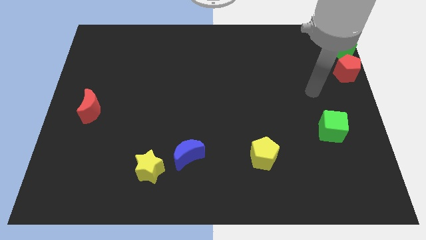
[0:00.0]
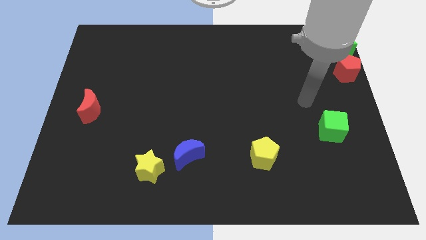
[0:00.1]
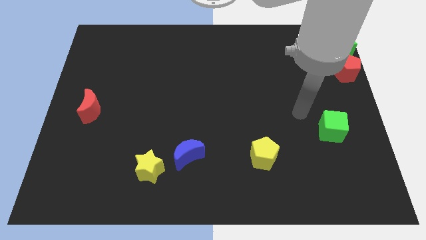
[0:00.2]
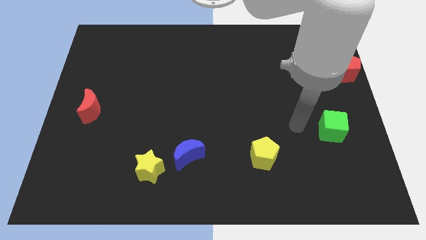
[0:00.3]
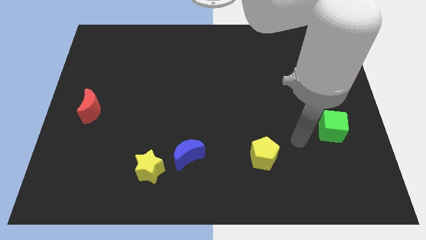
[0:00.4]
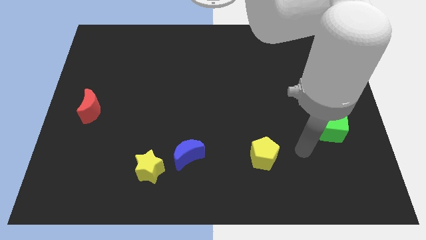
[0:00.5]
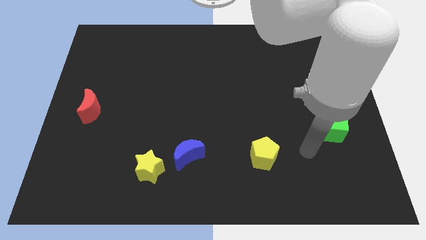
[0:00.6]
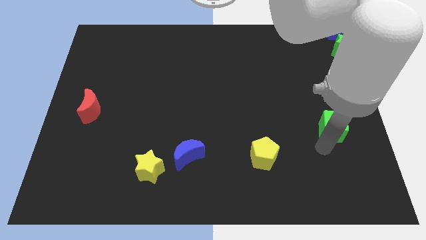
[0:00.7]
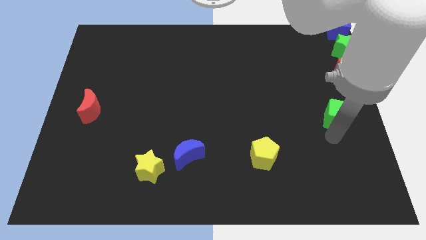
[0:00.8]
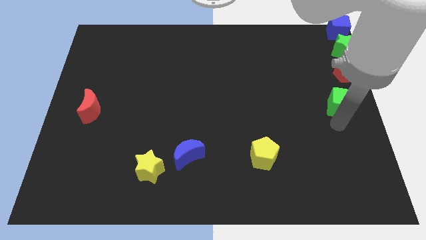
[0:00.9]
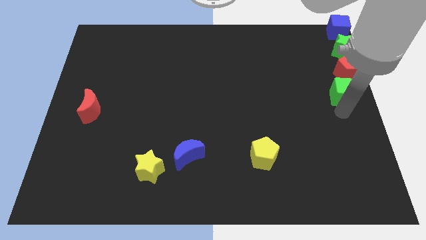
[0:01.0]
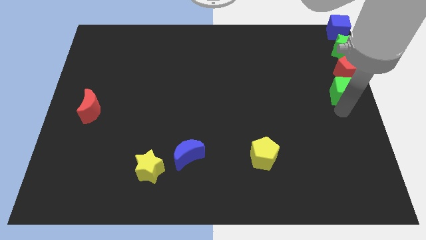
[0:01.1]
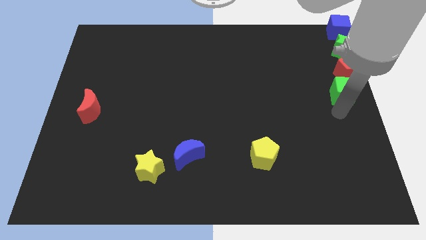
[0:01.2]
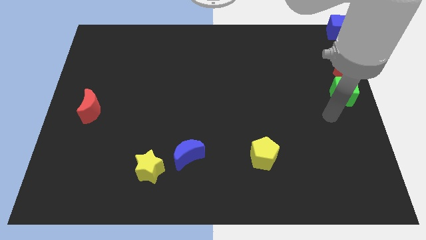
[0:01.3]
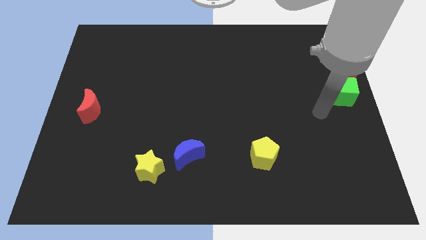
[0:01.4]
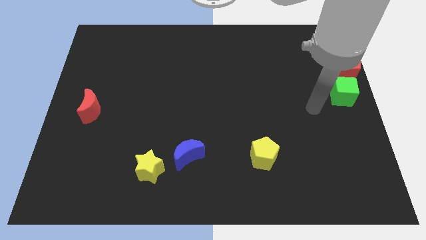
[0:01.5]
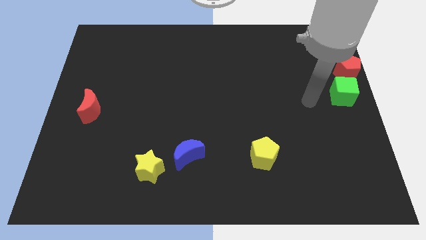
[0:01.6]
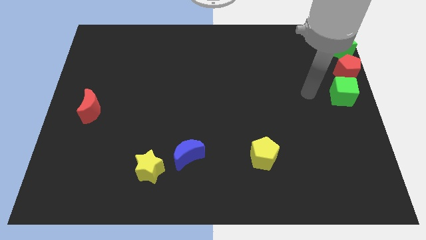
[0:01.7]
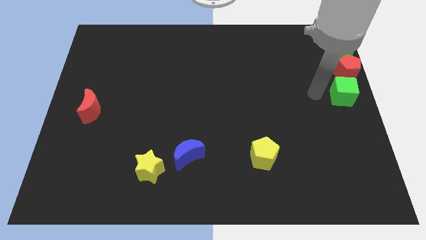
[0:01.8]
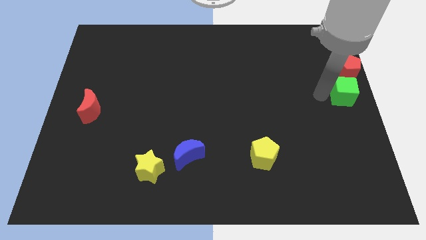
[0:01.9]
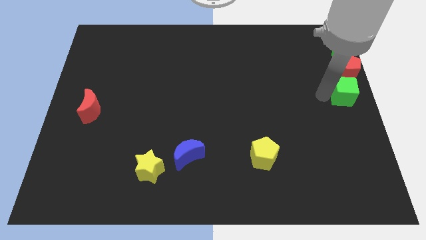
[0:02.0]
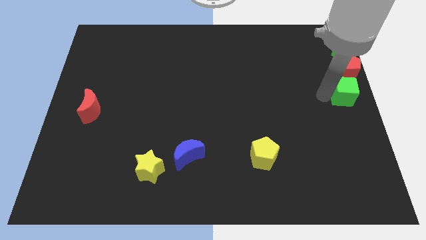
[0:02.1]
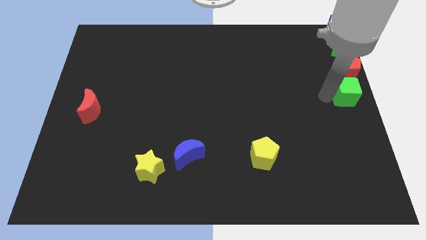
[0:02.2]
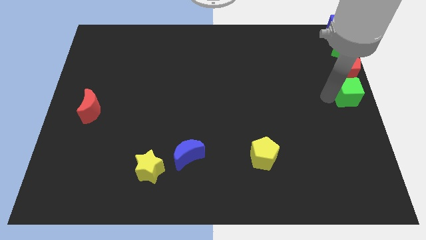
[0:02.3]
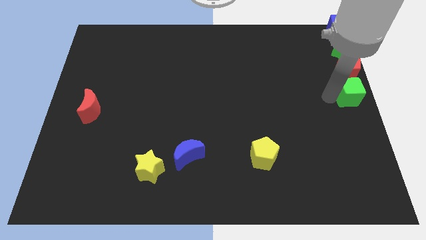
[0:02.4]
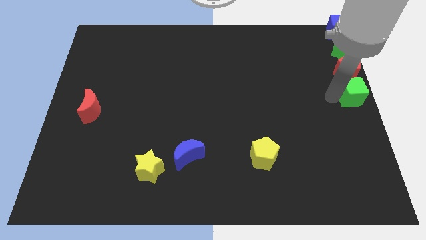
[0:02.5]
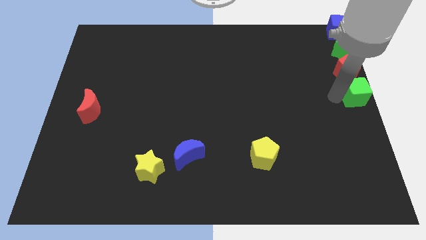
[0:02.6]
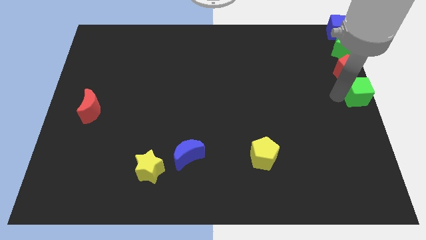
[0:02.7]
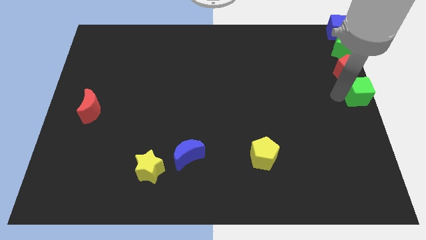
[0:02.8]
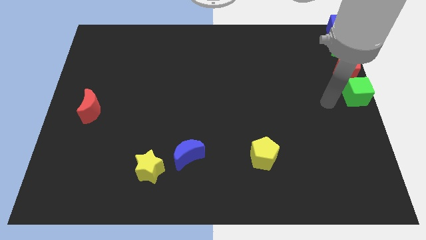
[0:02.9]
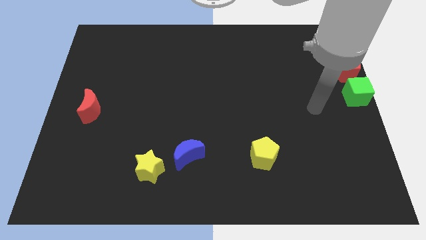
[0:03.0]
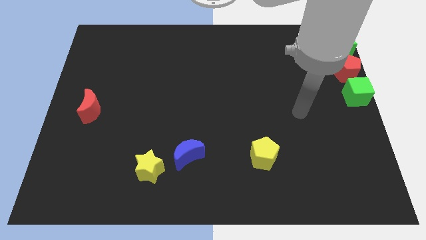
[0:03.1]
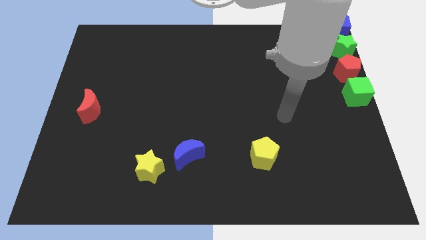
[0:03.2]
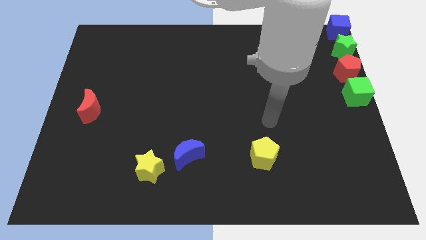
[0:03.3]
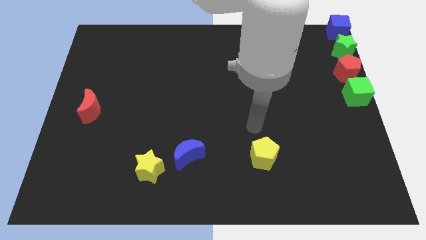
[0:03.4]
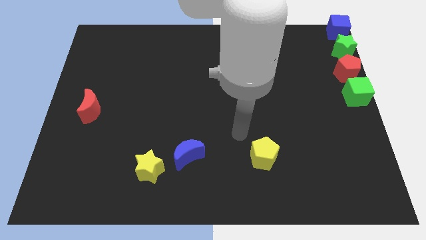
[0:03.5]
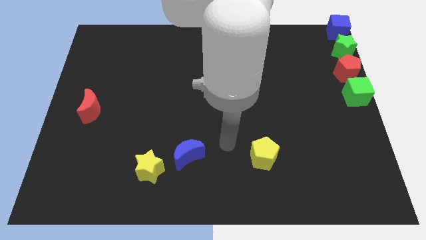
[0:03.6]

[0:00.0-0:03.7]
move the green cube below the red pentagon

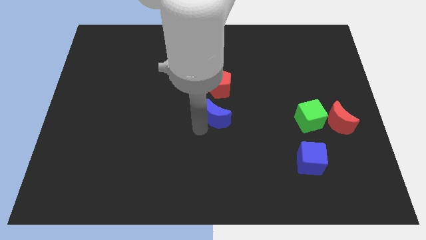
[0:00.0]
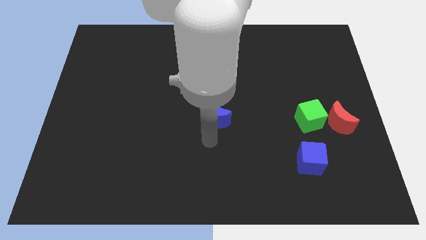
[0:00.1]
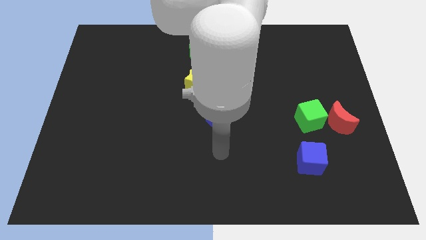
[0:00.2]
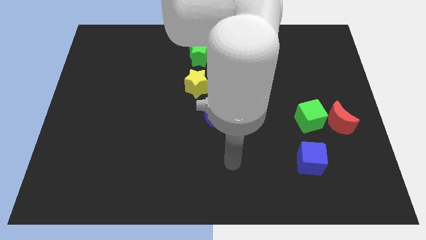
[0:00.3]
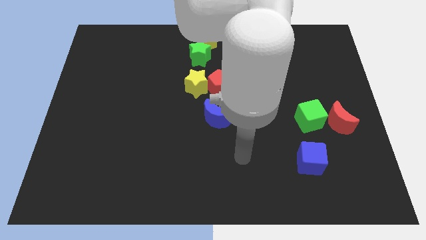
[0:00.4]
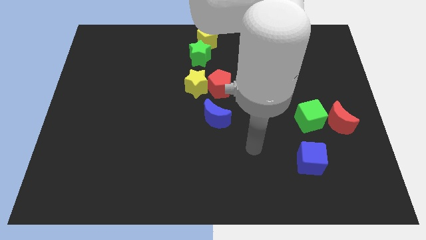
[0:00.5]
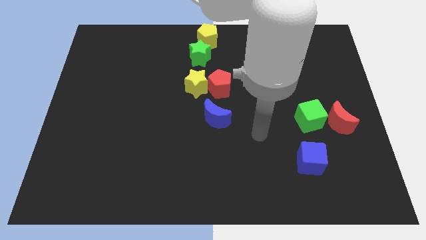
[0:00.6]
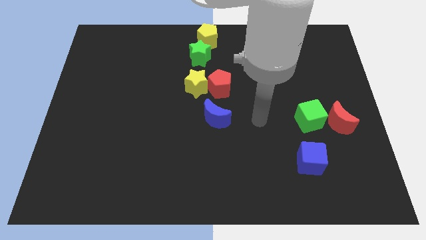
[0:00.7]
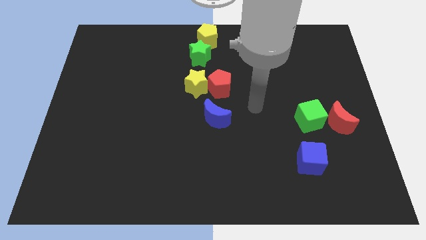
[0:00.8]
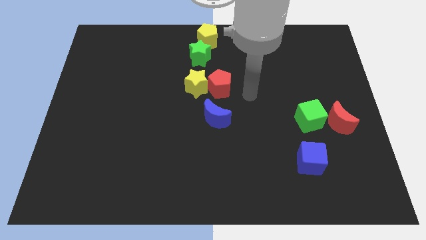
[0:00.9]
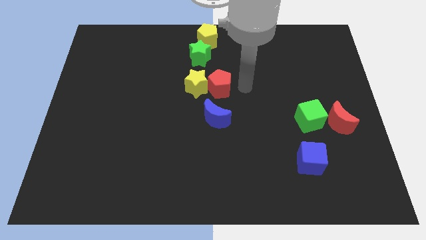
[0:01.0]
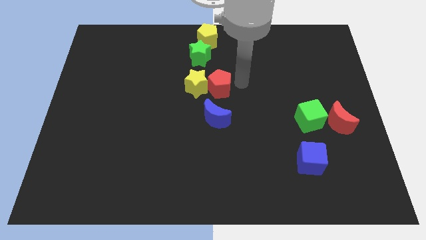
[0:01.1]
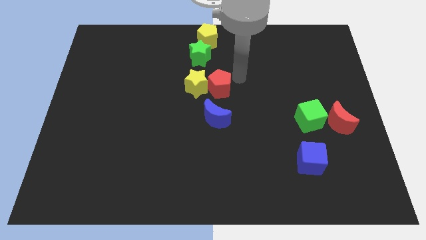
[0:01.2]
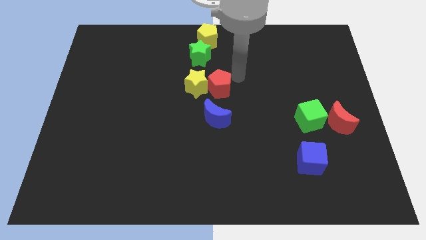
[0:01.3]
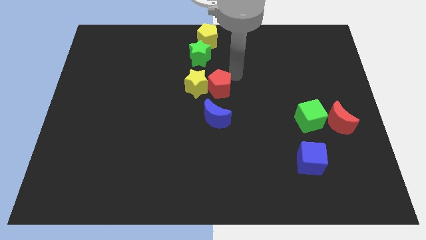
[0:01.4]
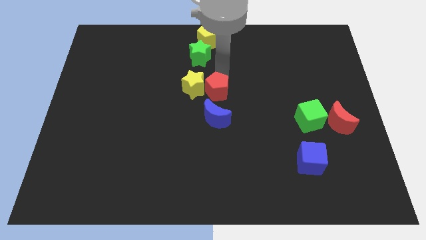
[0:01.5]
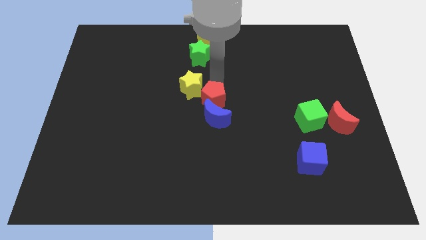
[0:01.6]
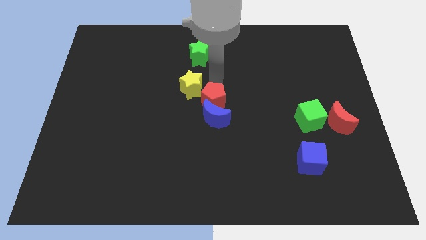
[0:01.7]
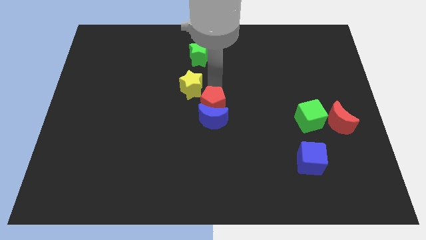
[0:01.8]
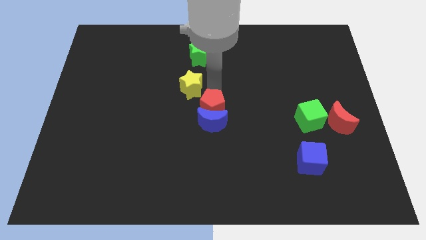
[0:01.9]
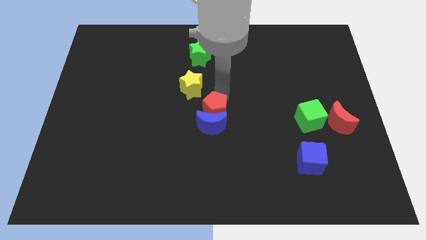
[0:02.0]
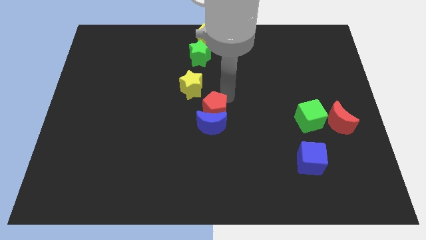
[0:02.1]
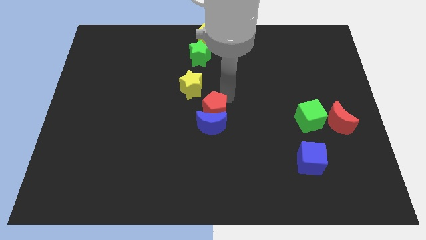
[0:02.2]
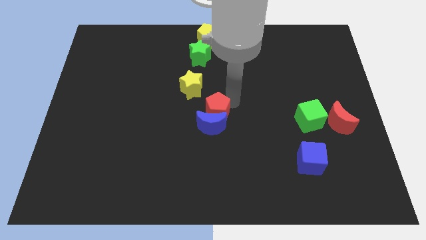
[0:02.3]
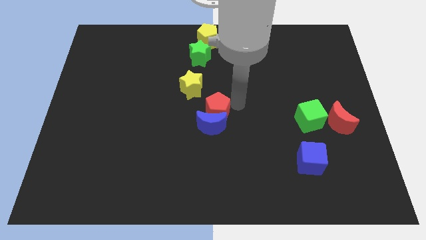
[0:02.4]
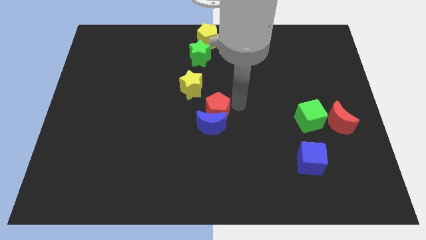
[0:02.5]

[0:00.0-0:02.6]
push the red pentagon into the top side of the blue moon

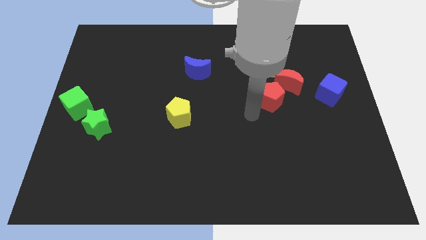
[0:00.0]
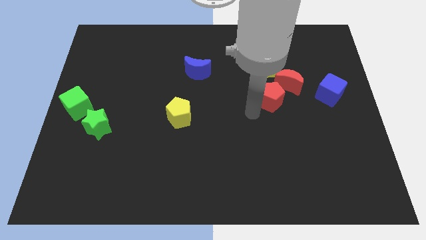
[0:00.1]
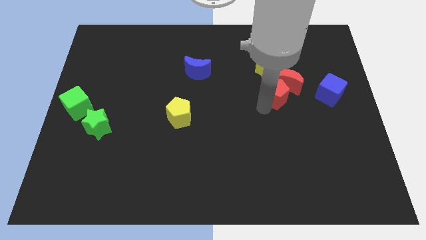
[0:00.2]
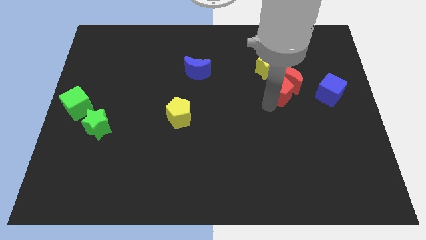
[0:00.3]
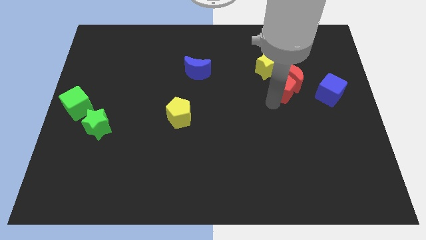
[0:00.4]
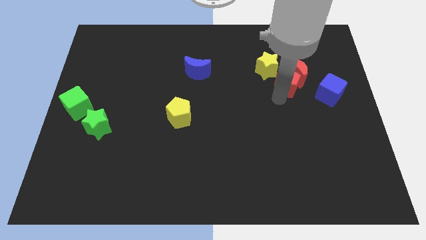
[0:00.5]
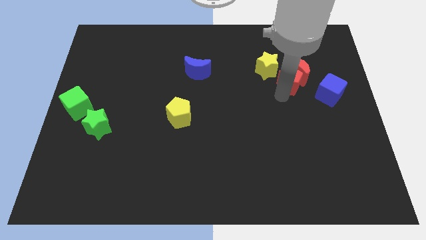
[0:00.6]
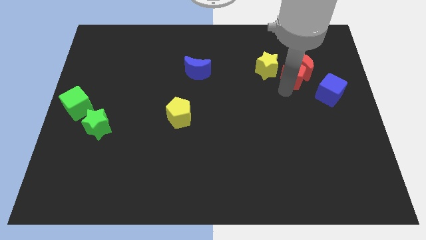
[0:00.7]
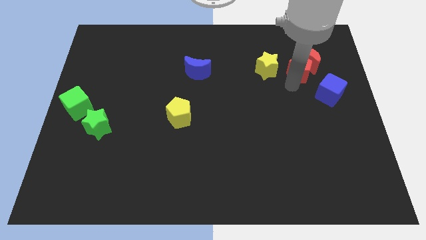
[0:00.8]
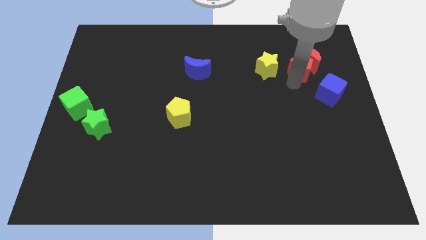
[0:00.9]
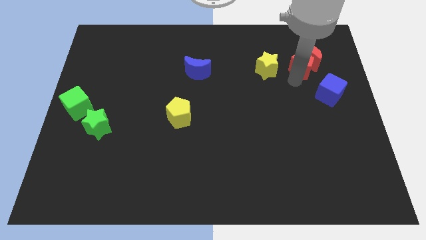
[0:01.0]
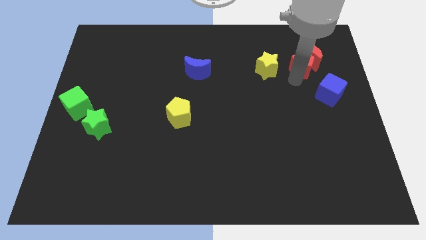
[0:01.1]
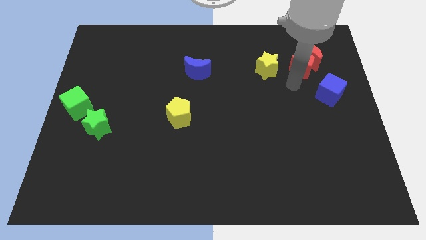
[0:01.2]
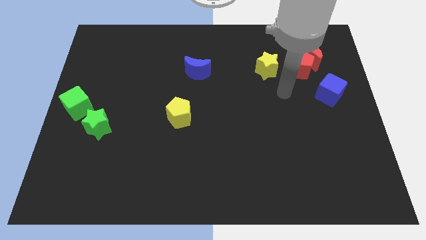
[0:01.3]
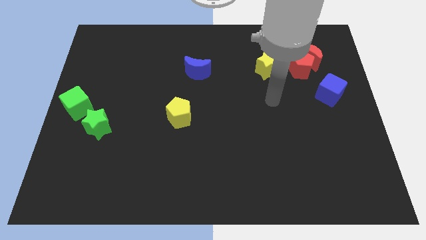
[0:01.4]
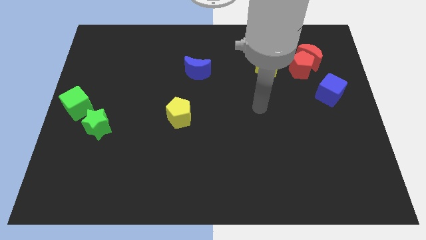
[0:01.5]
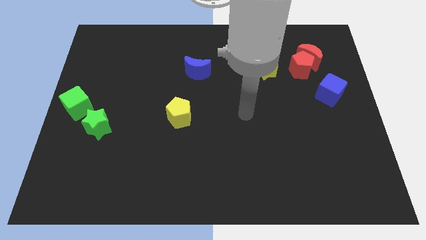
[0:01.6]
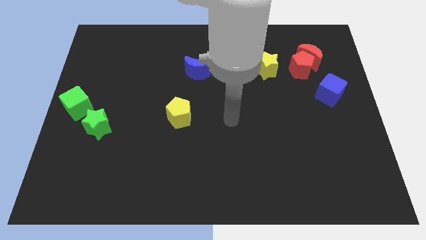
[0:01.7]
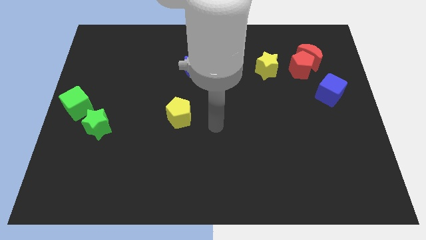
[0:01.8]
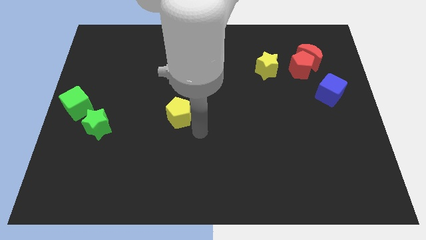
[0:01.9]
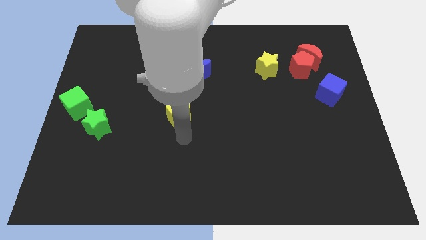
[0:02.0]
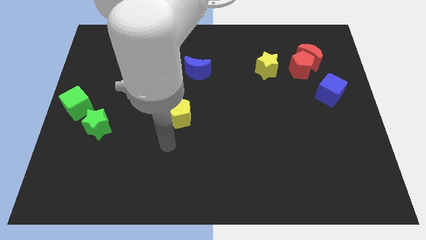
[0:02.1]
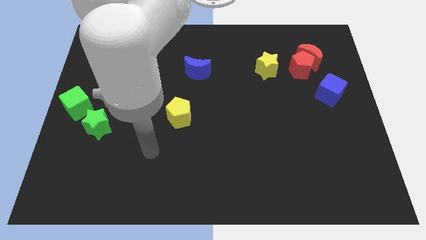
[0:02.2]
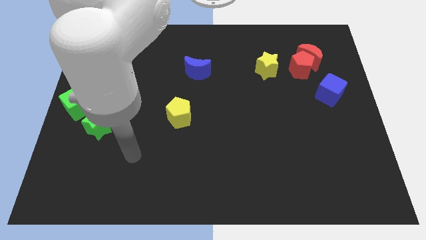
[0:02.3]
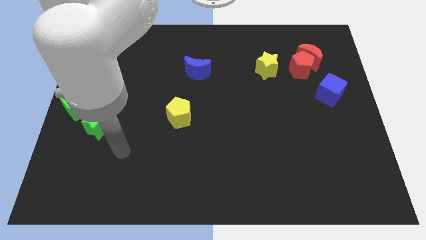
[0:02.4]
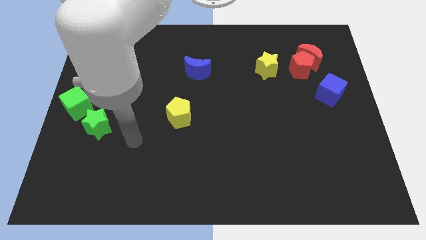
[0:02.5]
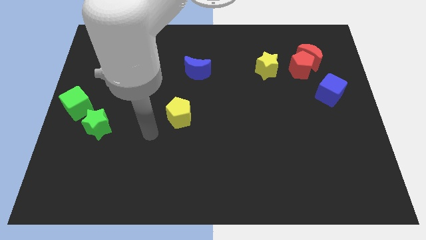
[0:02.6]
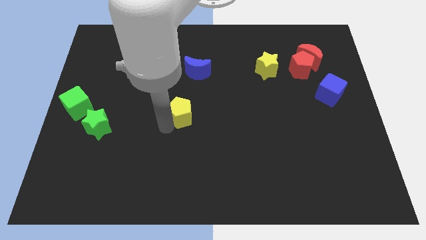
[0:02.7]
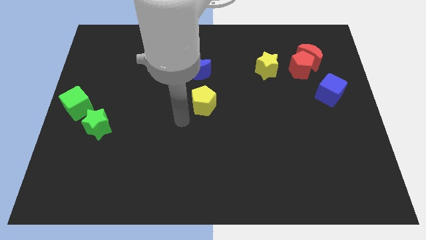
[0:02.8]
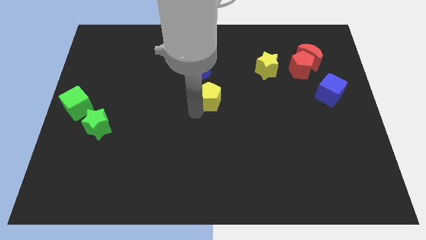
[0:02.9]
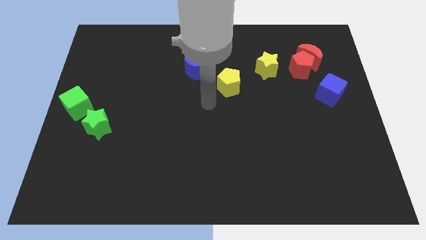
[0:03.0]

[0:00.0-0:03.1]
push red pentagon into the red moon
